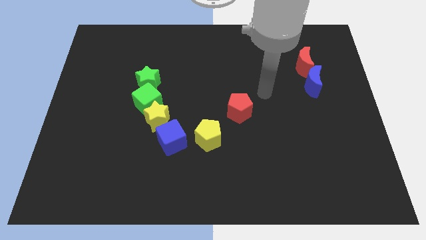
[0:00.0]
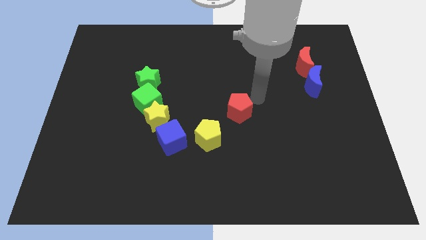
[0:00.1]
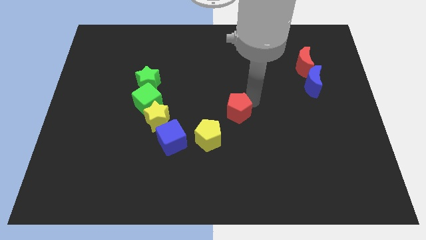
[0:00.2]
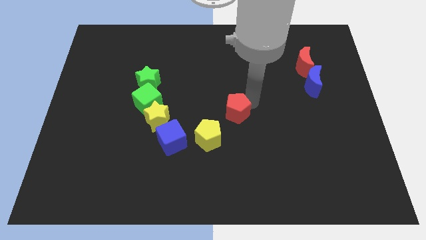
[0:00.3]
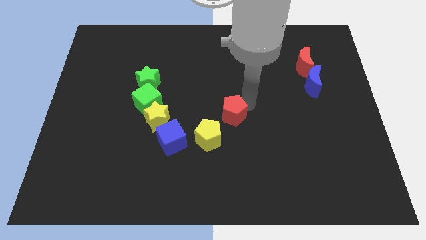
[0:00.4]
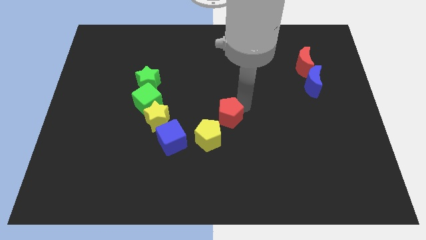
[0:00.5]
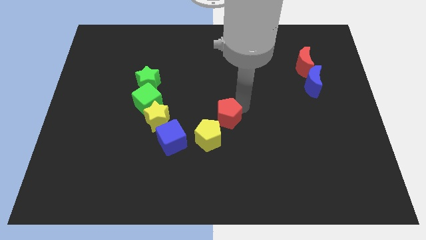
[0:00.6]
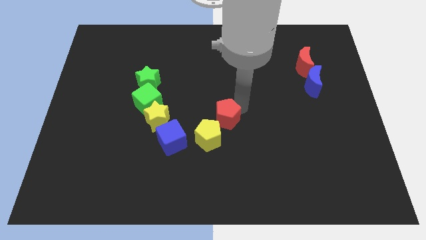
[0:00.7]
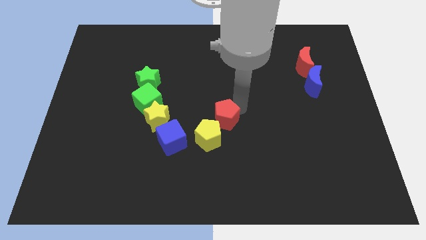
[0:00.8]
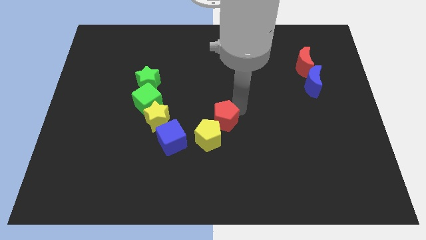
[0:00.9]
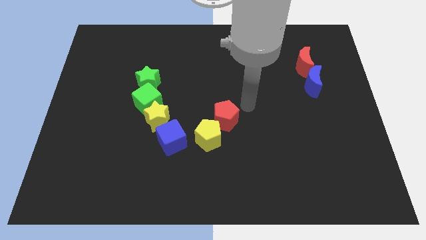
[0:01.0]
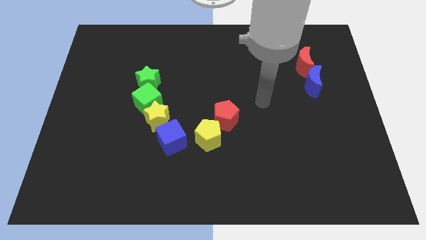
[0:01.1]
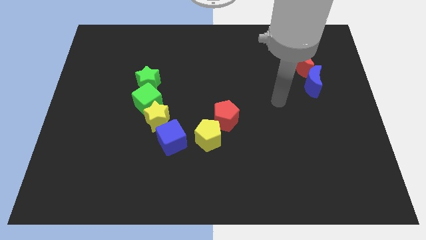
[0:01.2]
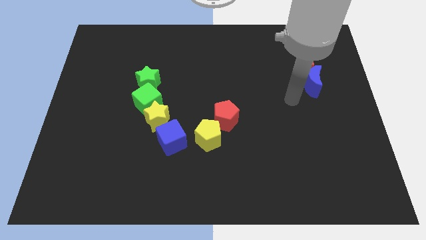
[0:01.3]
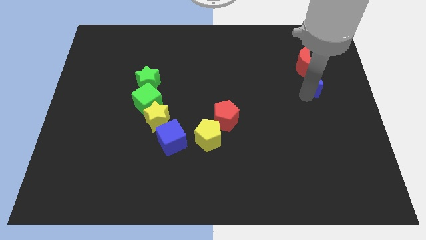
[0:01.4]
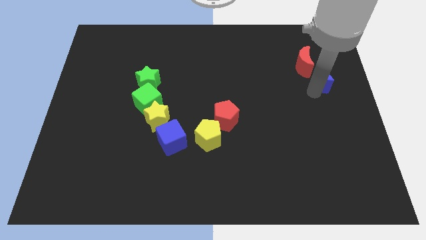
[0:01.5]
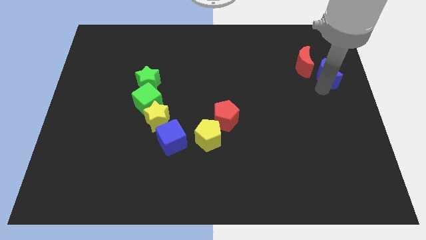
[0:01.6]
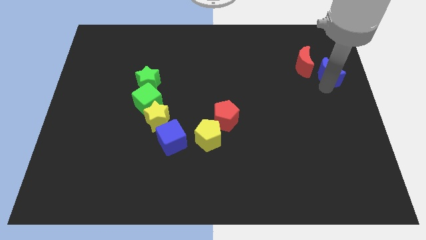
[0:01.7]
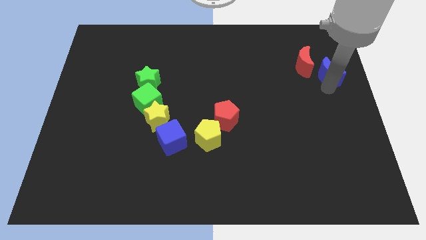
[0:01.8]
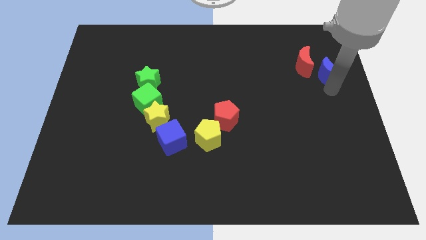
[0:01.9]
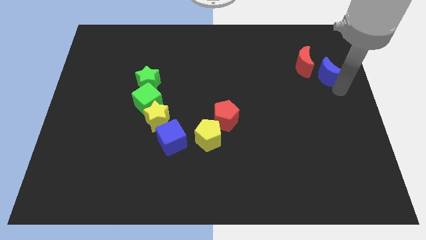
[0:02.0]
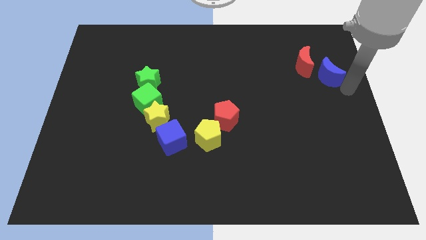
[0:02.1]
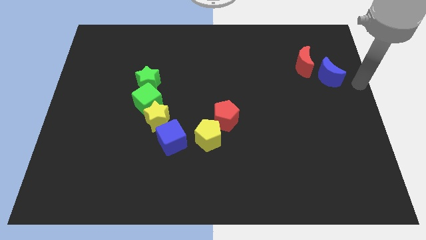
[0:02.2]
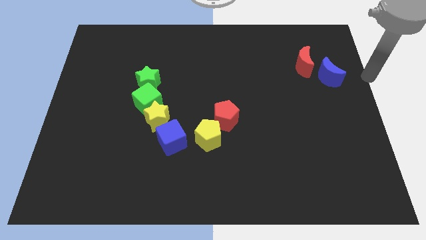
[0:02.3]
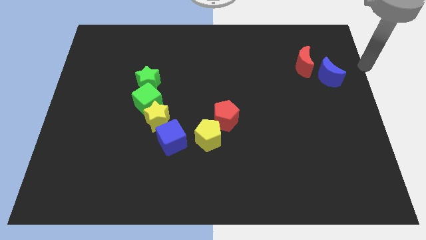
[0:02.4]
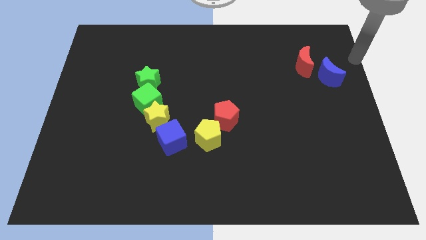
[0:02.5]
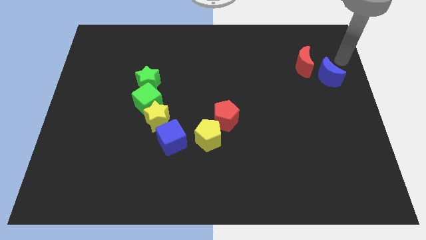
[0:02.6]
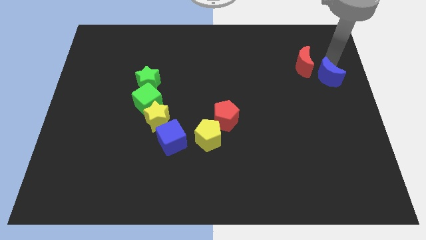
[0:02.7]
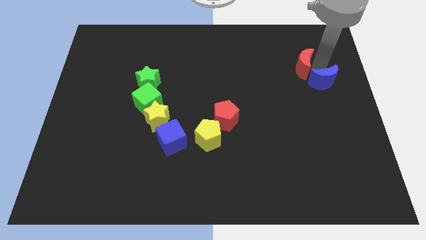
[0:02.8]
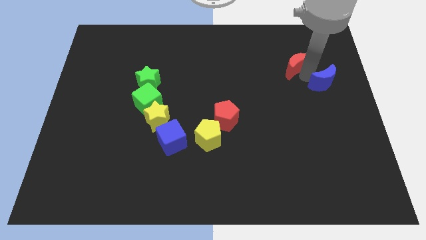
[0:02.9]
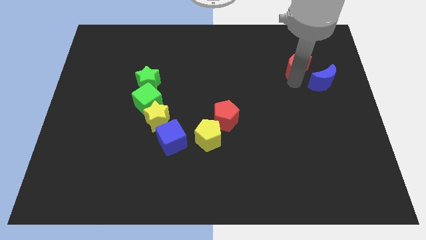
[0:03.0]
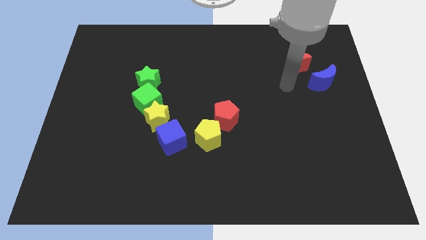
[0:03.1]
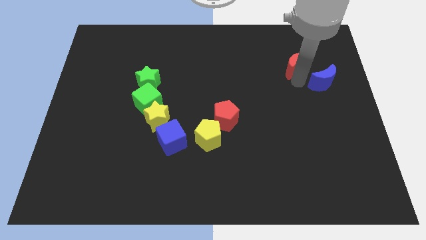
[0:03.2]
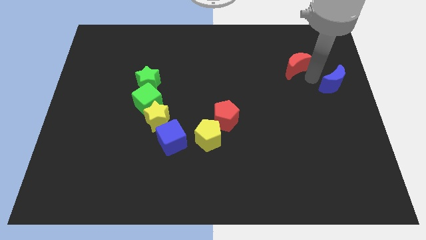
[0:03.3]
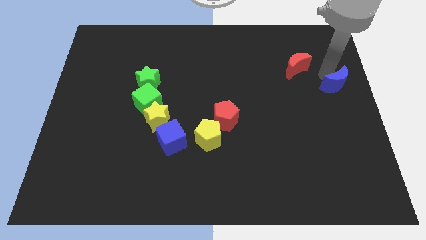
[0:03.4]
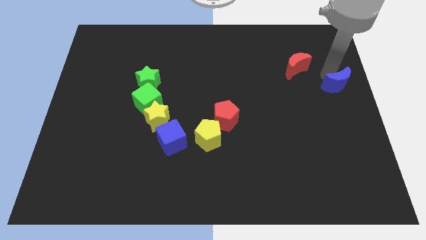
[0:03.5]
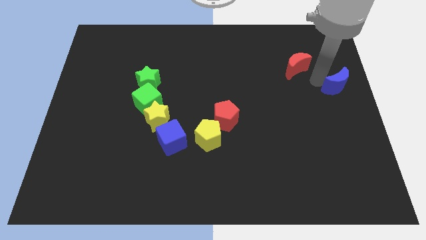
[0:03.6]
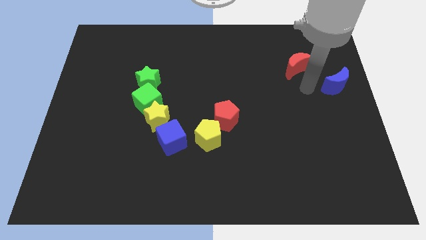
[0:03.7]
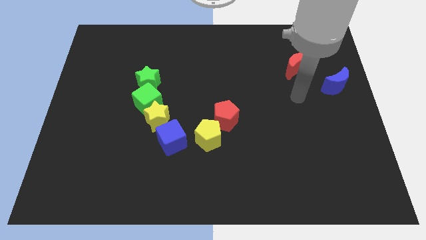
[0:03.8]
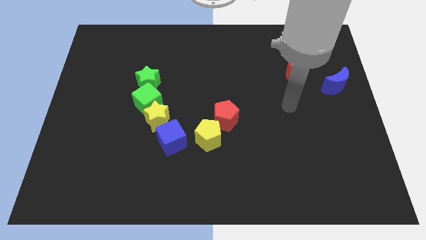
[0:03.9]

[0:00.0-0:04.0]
separate the red moon and blue moon

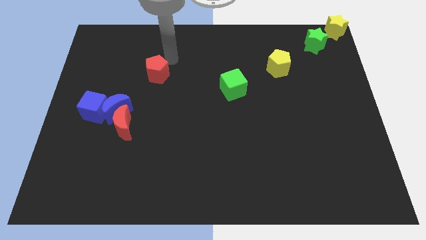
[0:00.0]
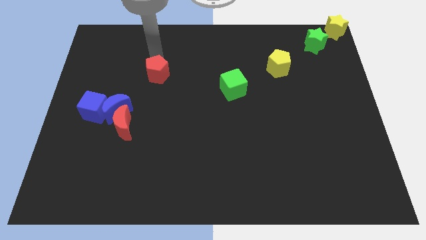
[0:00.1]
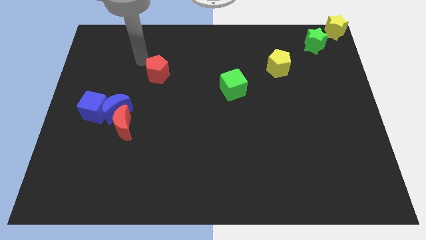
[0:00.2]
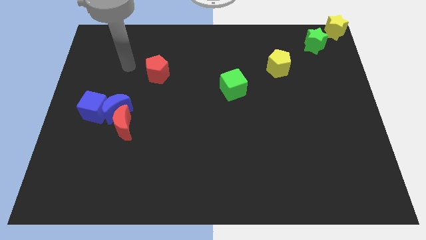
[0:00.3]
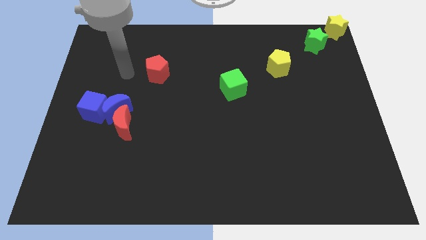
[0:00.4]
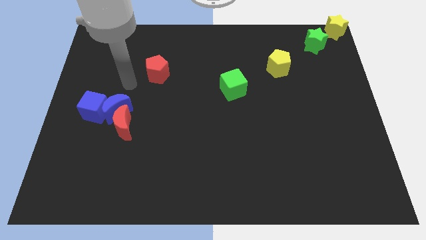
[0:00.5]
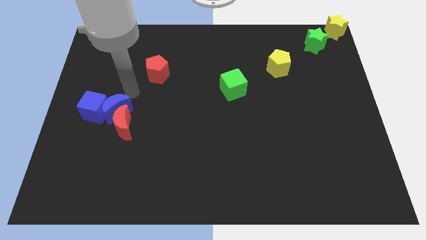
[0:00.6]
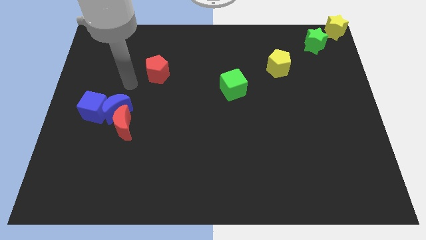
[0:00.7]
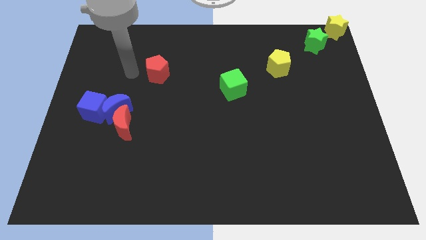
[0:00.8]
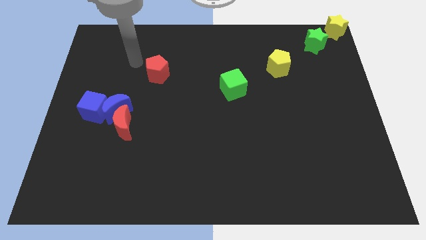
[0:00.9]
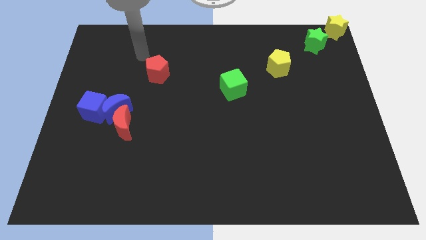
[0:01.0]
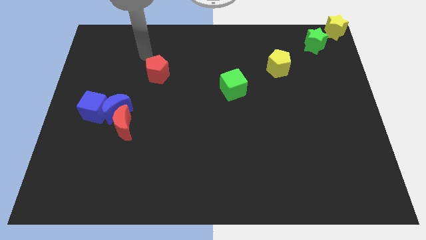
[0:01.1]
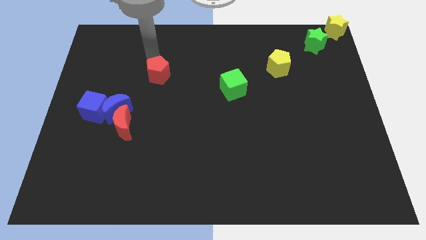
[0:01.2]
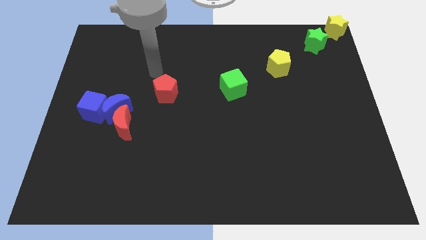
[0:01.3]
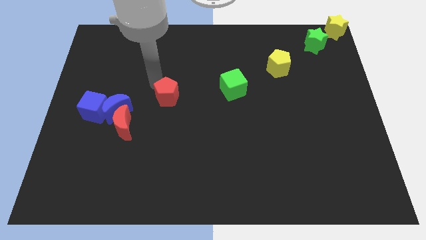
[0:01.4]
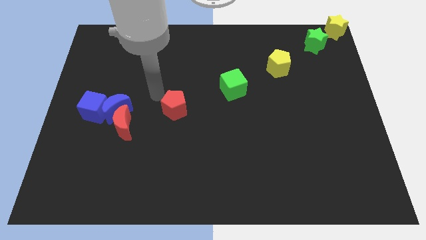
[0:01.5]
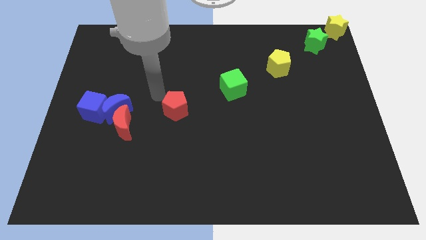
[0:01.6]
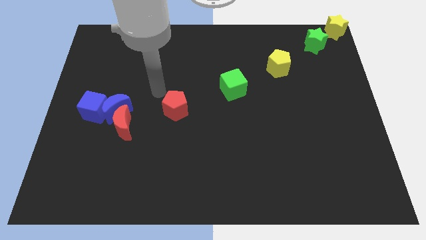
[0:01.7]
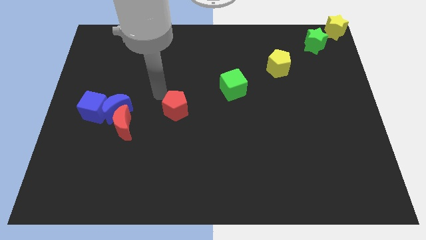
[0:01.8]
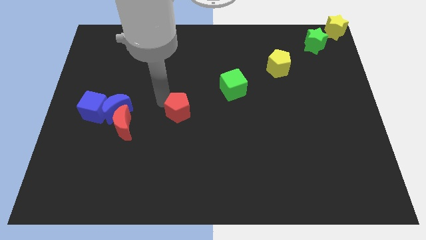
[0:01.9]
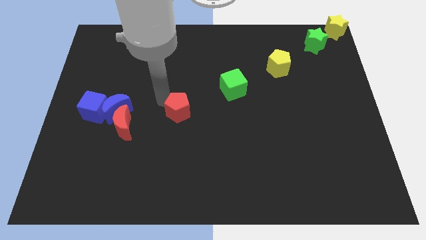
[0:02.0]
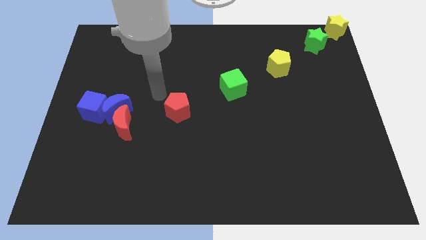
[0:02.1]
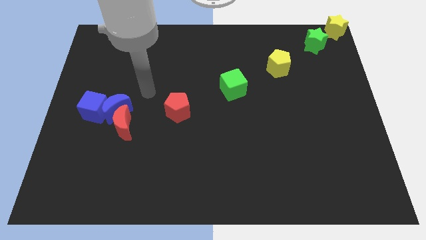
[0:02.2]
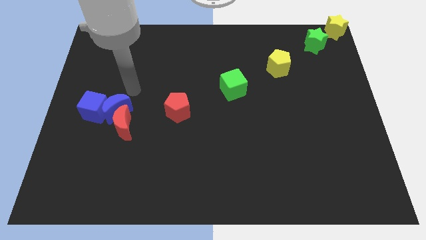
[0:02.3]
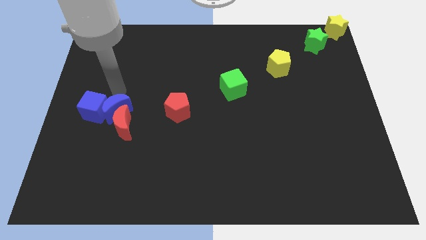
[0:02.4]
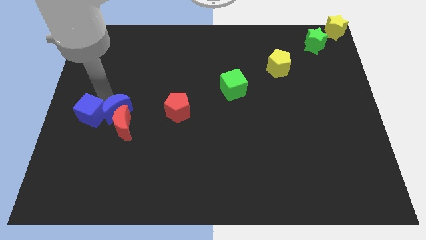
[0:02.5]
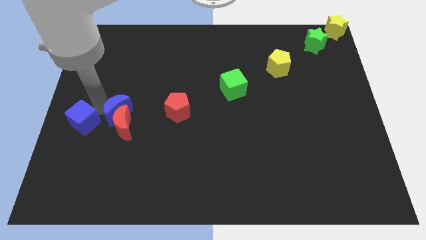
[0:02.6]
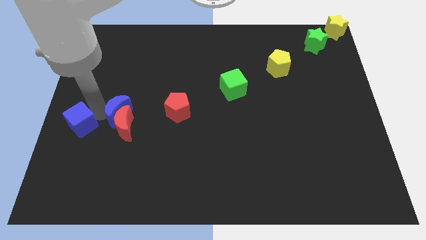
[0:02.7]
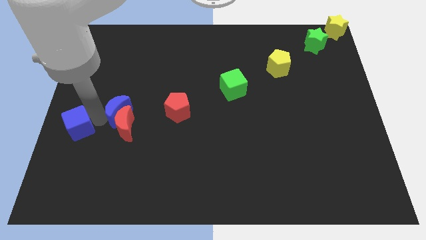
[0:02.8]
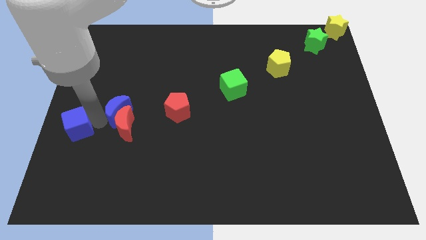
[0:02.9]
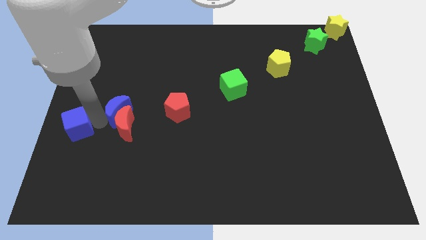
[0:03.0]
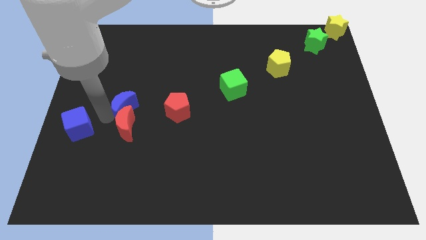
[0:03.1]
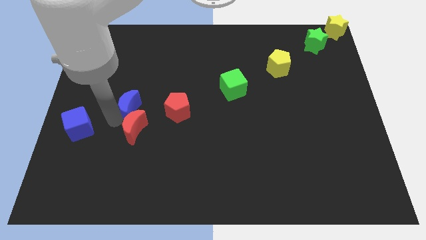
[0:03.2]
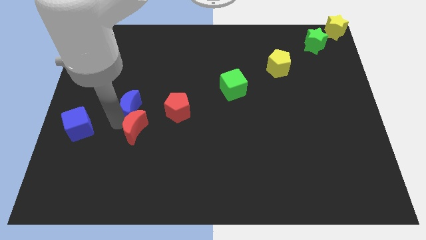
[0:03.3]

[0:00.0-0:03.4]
slide the red pentagon towards the center

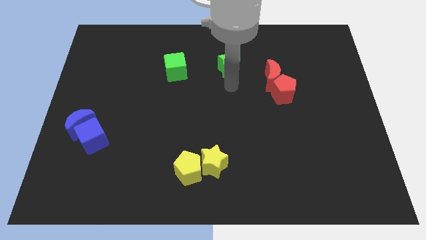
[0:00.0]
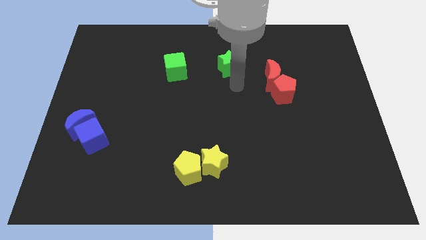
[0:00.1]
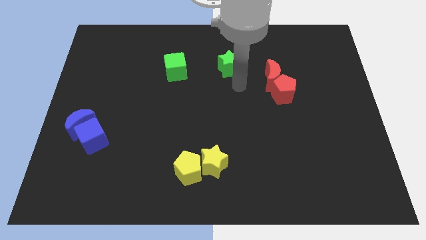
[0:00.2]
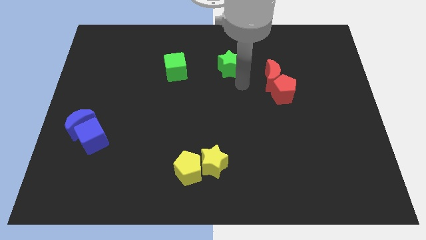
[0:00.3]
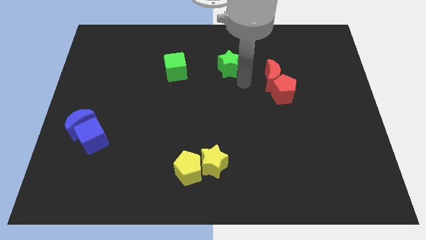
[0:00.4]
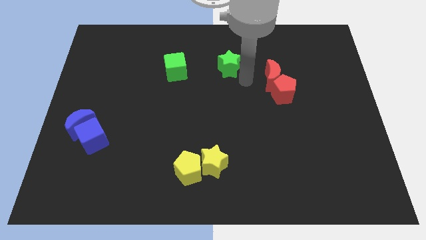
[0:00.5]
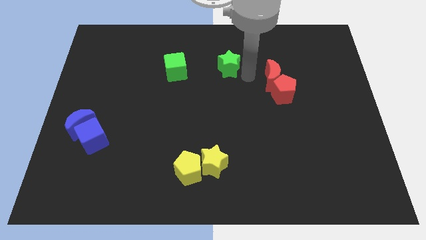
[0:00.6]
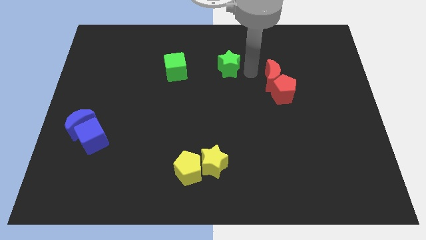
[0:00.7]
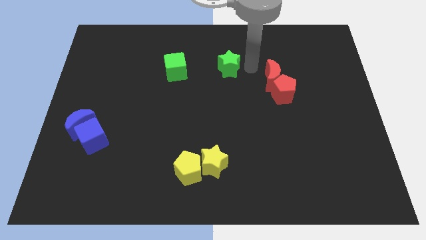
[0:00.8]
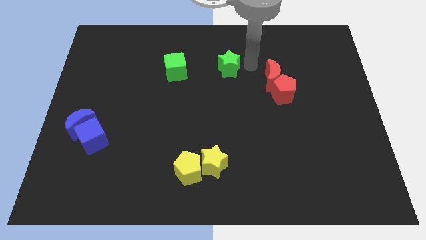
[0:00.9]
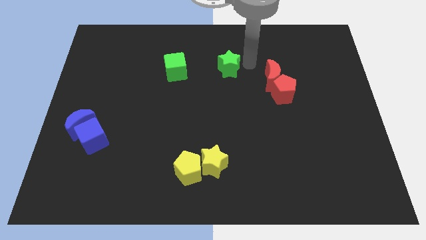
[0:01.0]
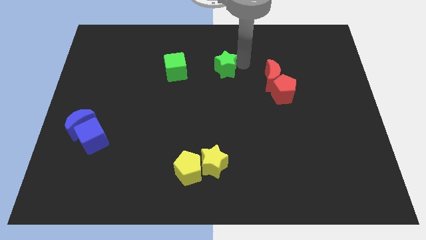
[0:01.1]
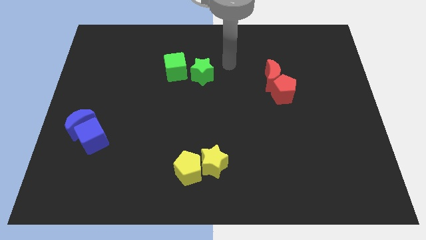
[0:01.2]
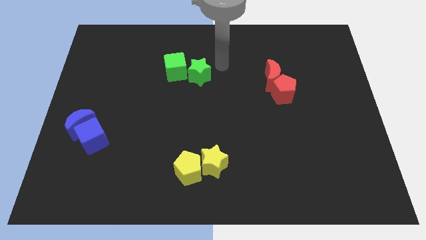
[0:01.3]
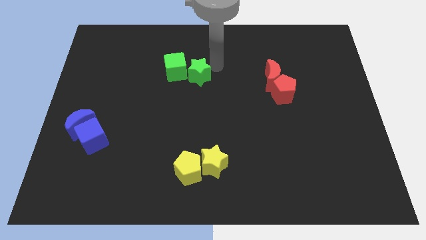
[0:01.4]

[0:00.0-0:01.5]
push the green star into the green cube
